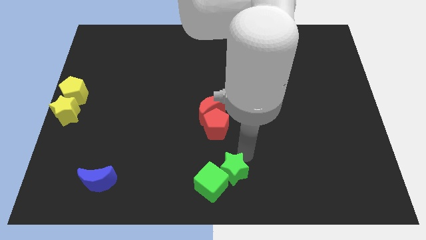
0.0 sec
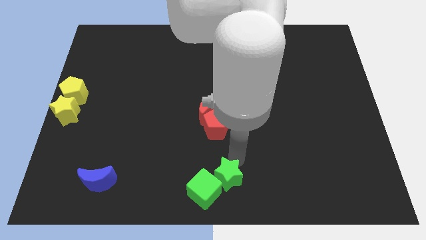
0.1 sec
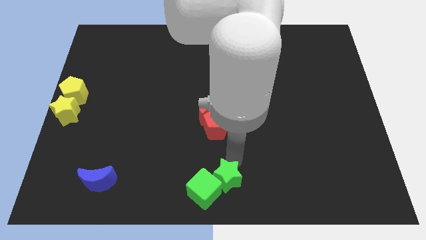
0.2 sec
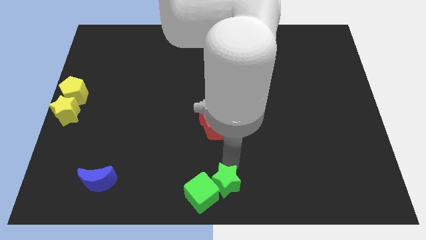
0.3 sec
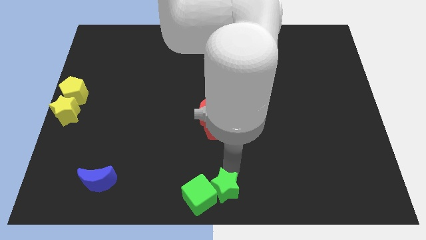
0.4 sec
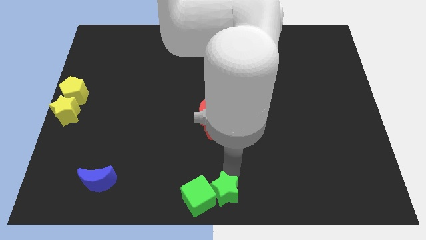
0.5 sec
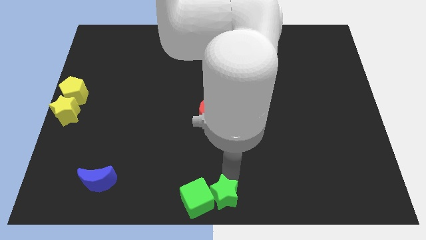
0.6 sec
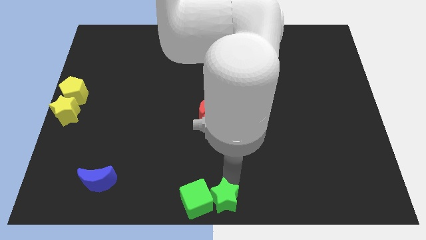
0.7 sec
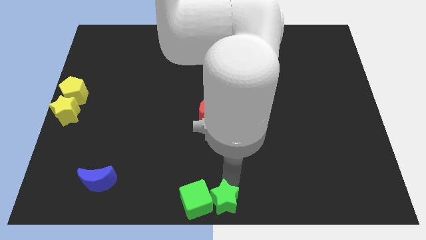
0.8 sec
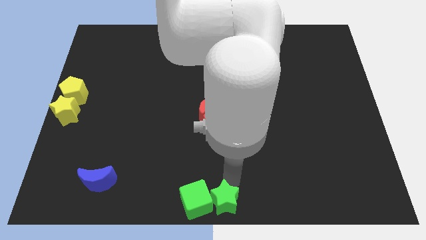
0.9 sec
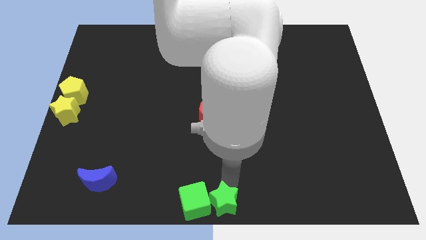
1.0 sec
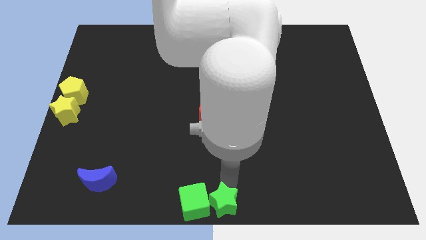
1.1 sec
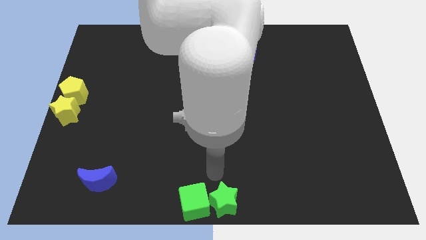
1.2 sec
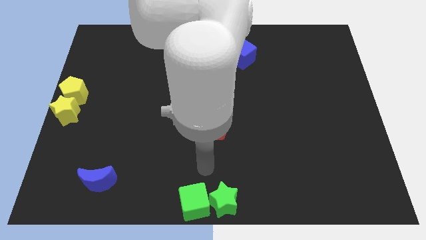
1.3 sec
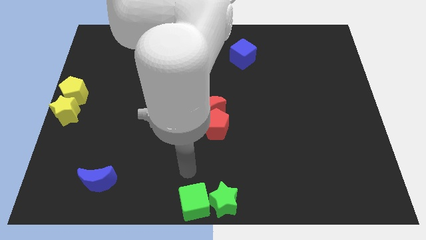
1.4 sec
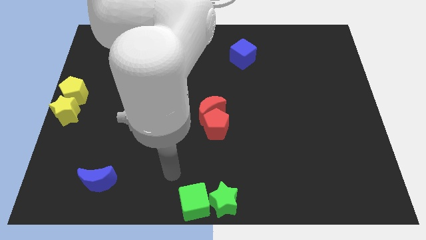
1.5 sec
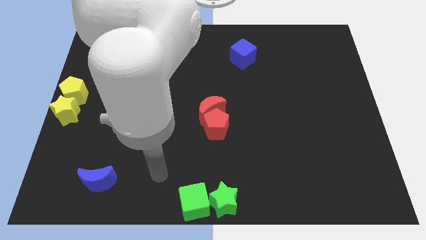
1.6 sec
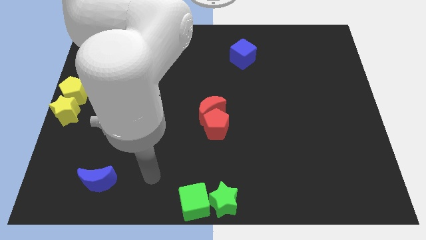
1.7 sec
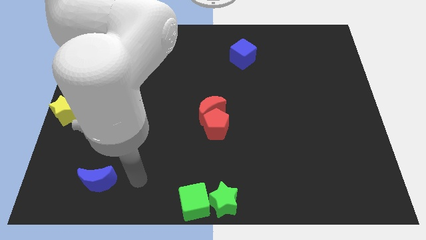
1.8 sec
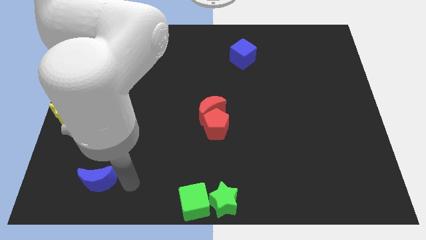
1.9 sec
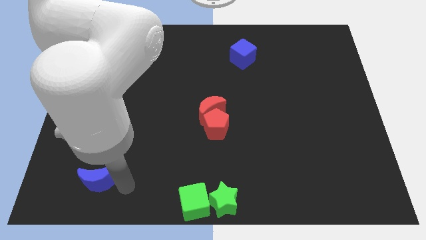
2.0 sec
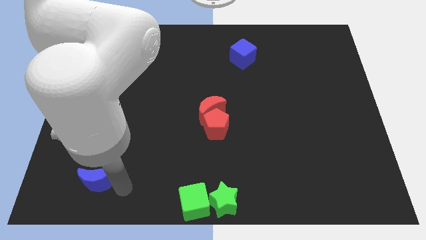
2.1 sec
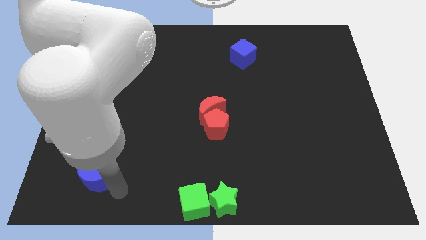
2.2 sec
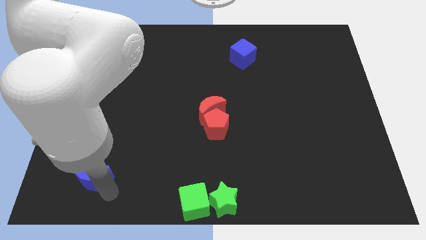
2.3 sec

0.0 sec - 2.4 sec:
place the green cube and green star below the red crescent and red pentagon

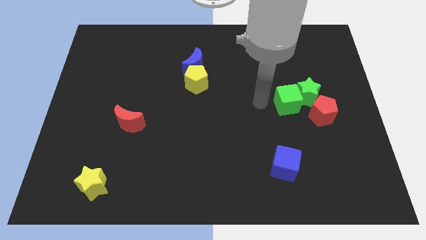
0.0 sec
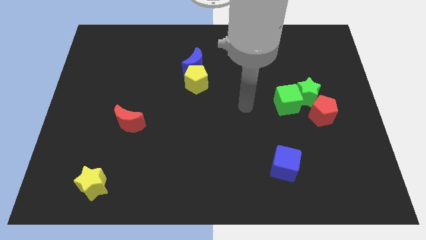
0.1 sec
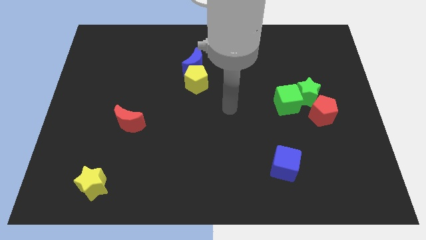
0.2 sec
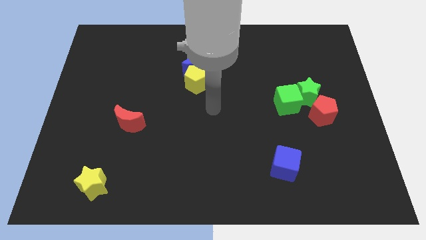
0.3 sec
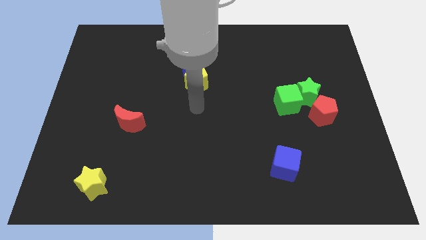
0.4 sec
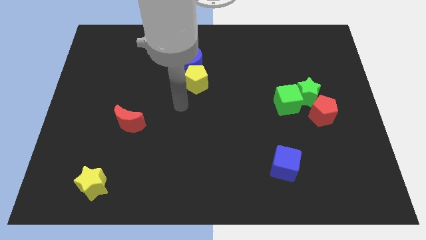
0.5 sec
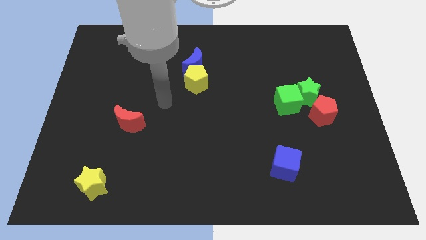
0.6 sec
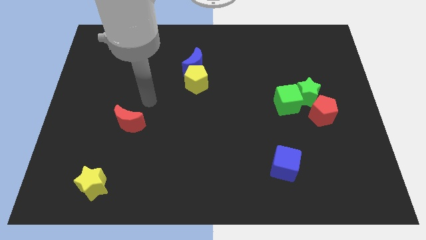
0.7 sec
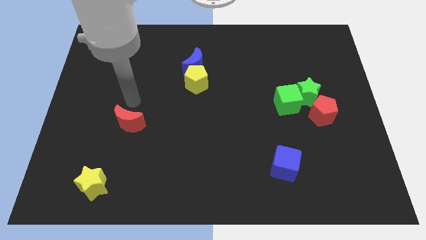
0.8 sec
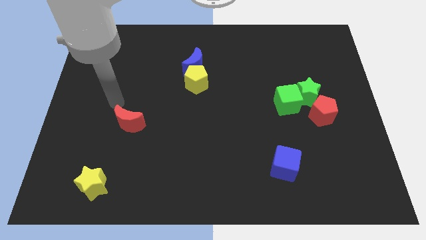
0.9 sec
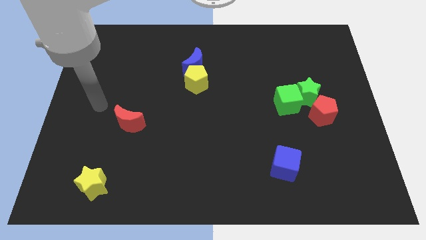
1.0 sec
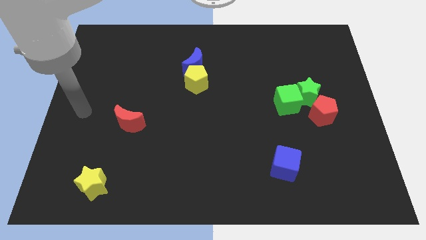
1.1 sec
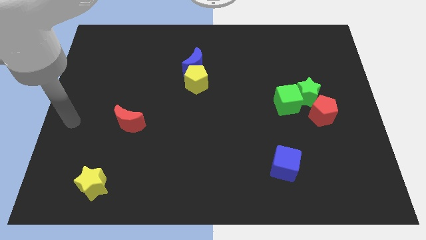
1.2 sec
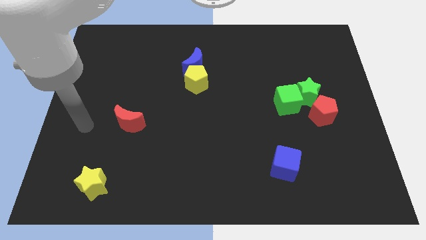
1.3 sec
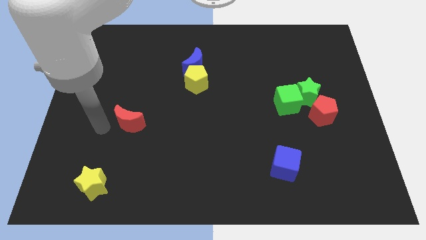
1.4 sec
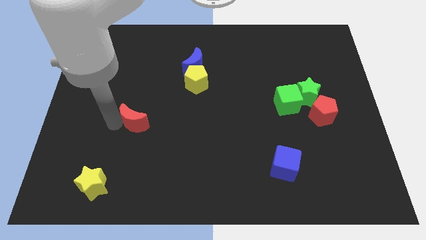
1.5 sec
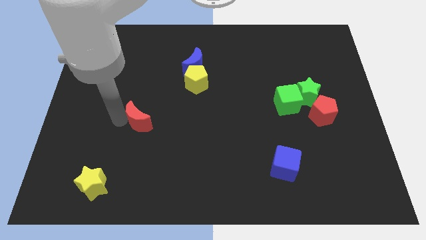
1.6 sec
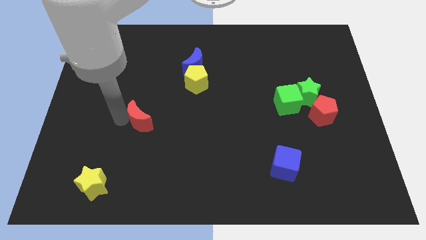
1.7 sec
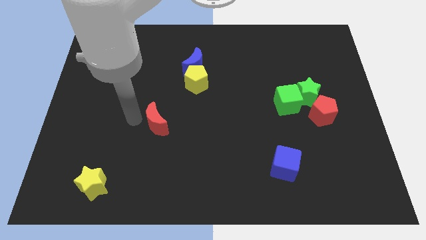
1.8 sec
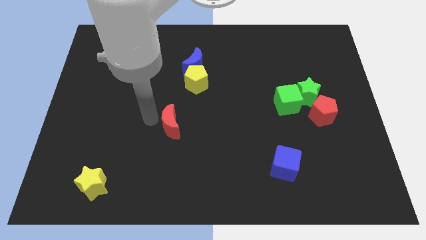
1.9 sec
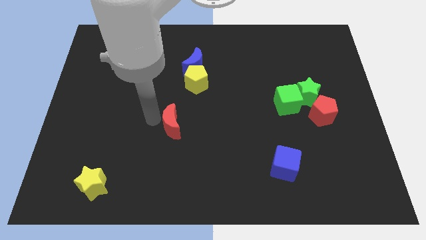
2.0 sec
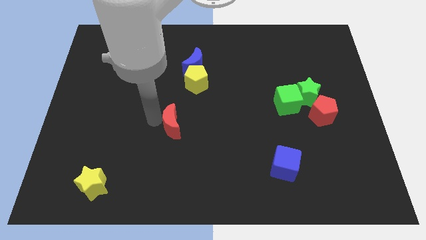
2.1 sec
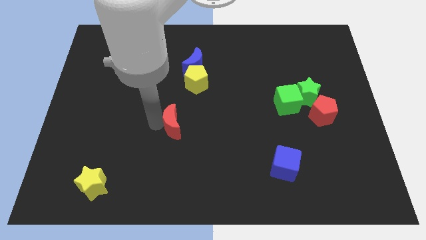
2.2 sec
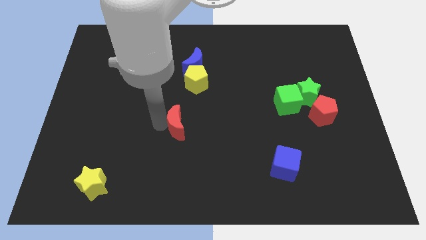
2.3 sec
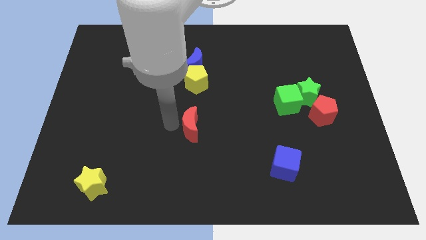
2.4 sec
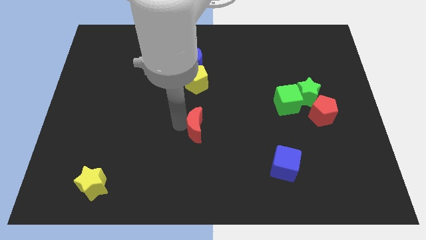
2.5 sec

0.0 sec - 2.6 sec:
move the red moon under the yellow pentagon

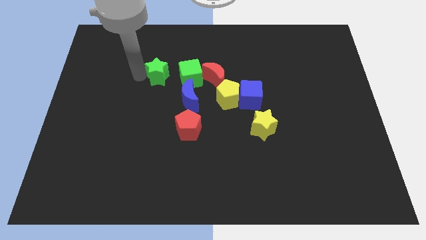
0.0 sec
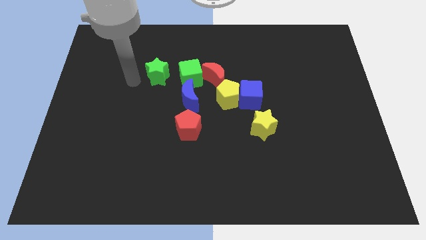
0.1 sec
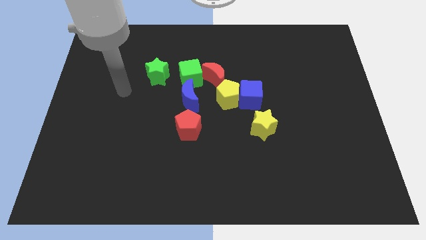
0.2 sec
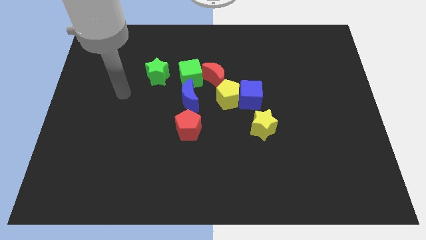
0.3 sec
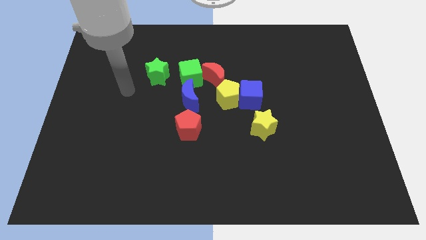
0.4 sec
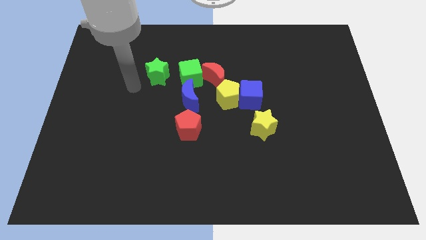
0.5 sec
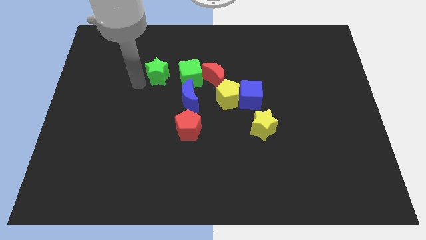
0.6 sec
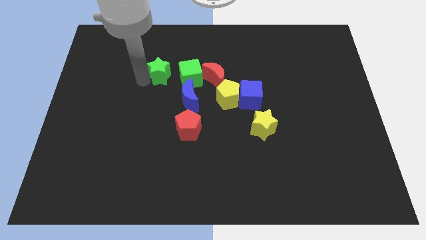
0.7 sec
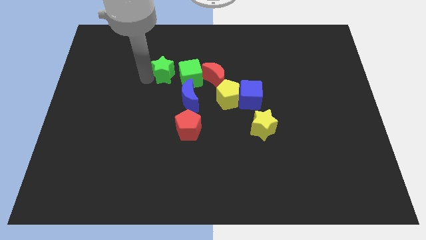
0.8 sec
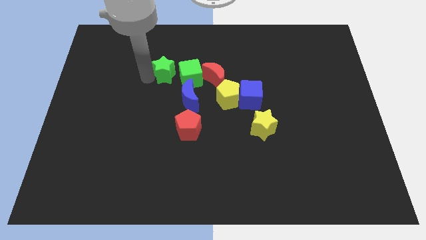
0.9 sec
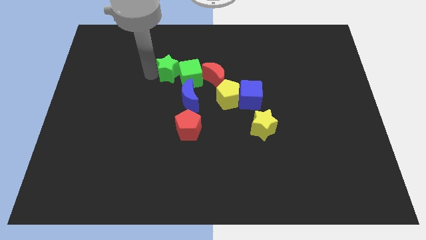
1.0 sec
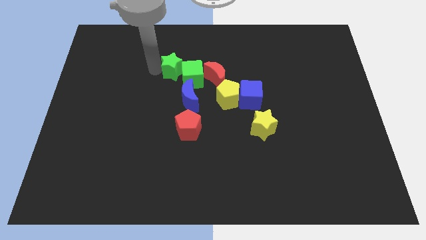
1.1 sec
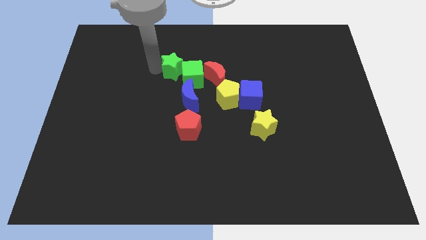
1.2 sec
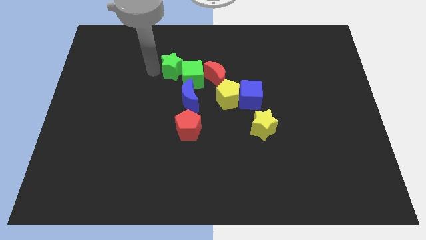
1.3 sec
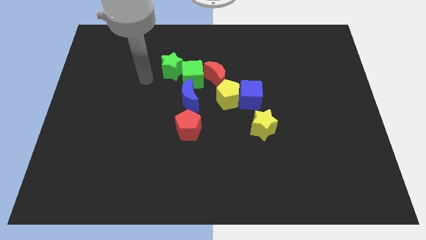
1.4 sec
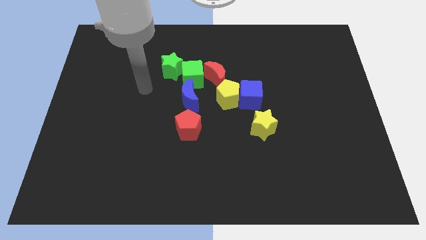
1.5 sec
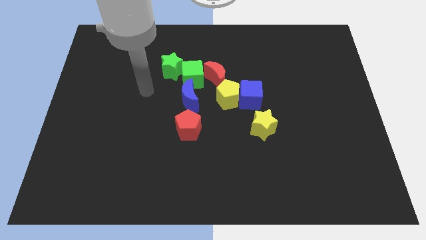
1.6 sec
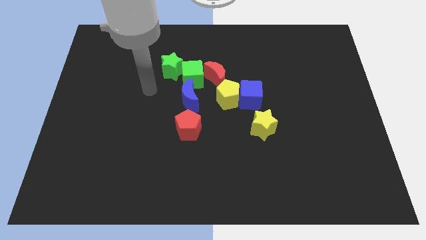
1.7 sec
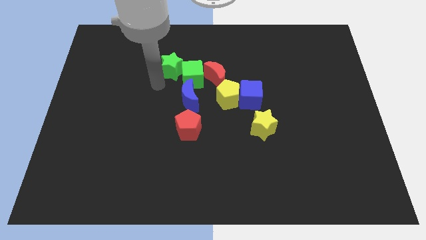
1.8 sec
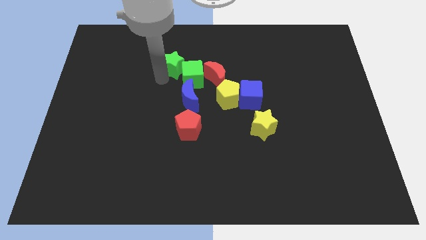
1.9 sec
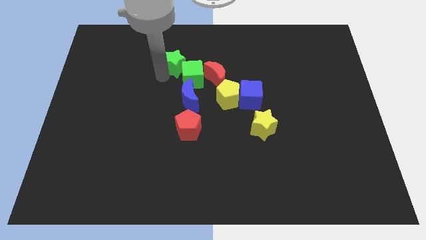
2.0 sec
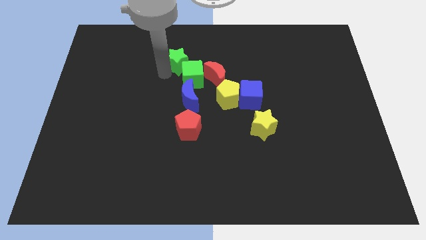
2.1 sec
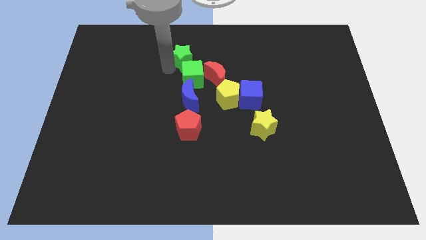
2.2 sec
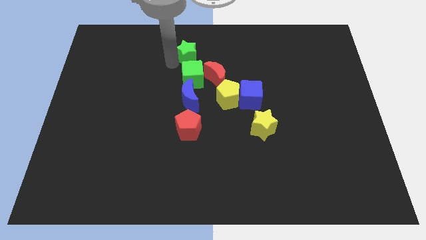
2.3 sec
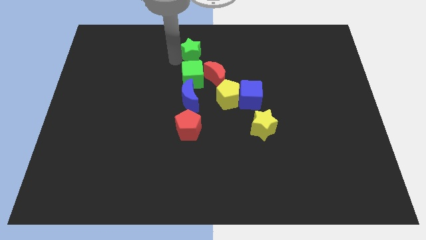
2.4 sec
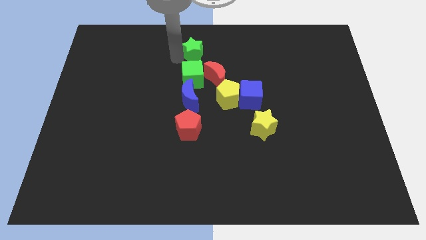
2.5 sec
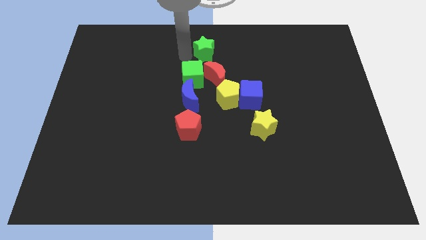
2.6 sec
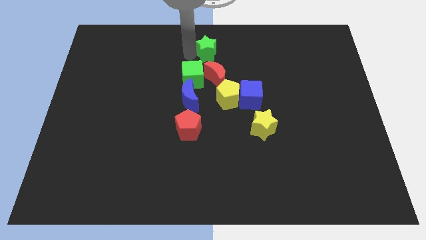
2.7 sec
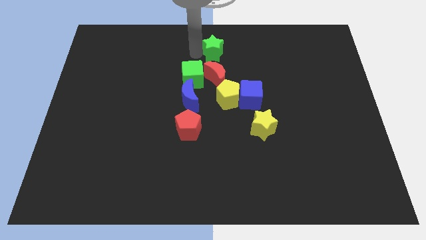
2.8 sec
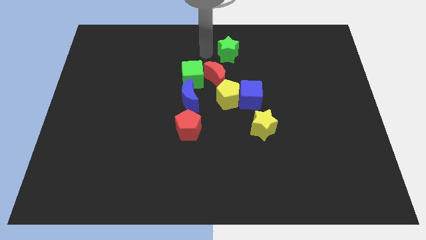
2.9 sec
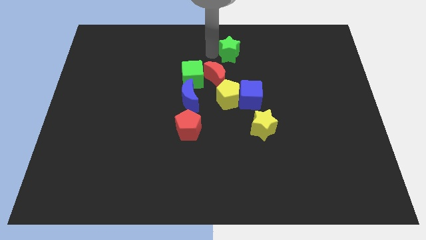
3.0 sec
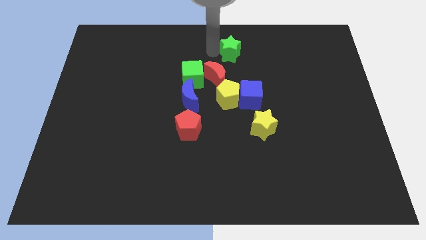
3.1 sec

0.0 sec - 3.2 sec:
push green star towards the top

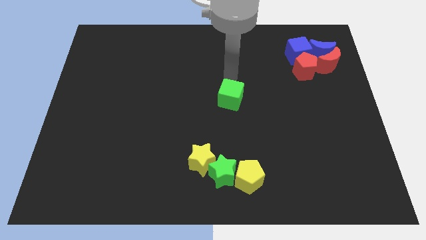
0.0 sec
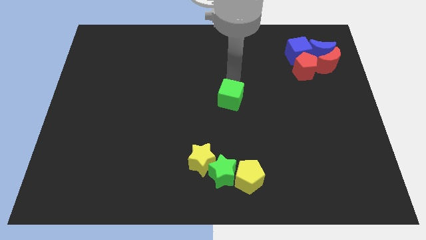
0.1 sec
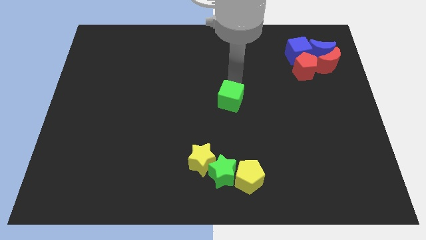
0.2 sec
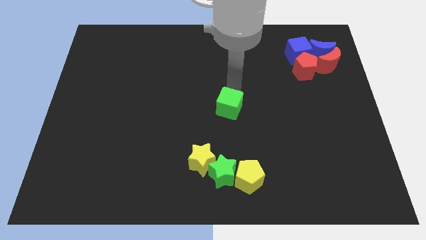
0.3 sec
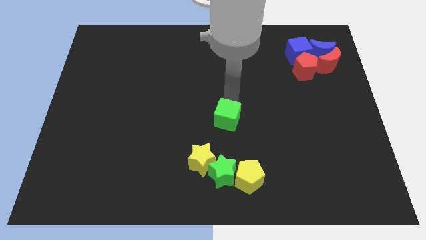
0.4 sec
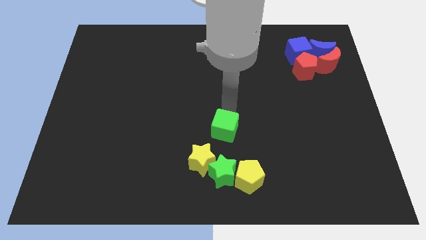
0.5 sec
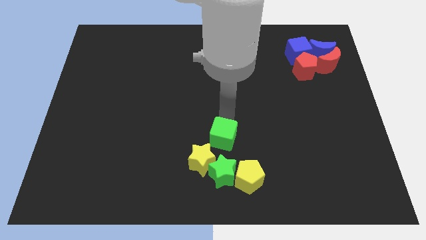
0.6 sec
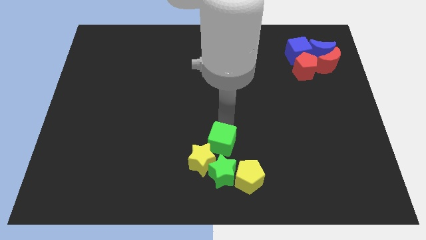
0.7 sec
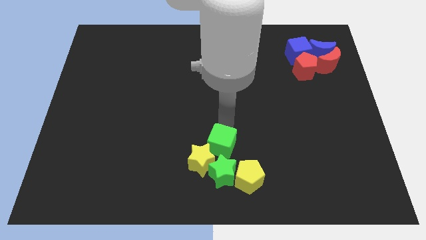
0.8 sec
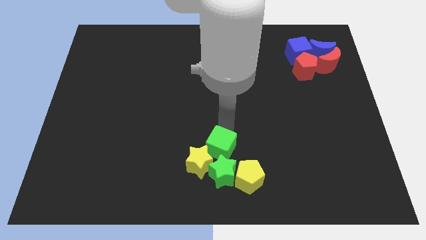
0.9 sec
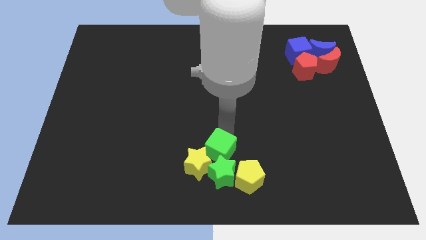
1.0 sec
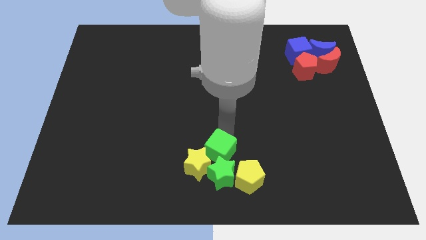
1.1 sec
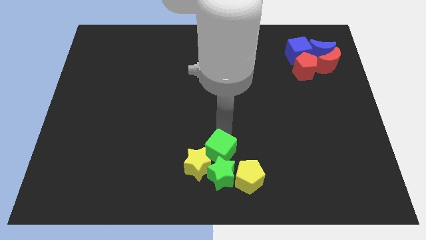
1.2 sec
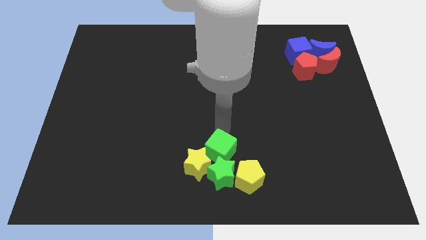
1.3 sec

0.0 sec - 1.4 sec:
push green cube towards green star
